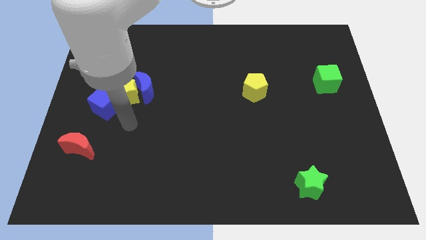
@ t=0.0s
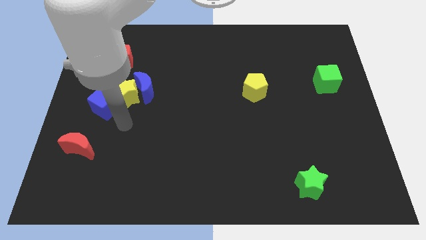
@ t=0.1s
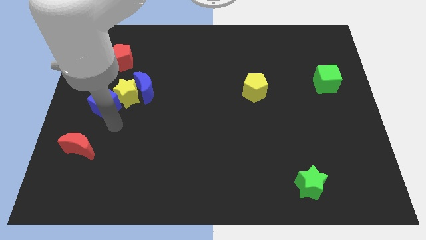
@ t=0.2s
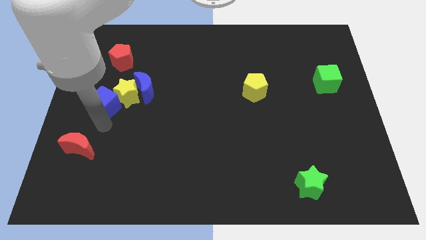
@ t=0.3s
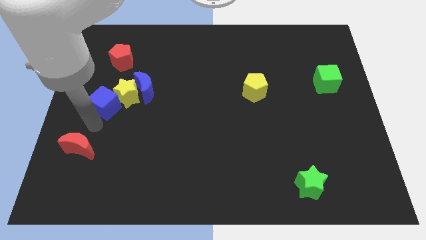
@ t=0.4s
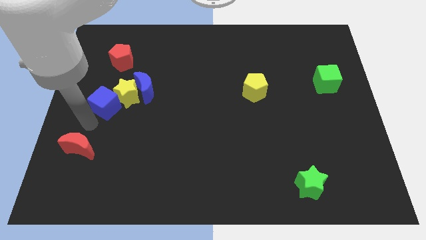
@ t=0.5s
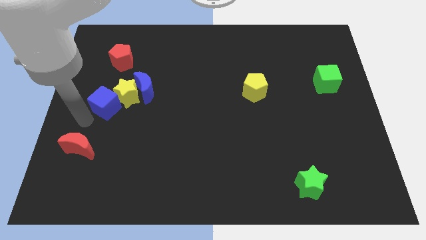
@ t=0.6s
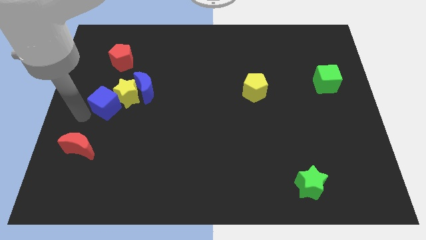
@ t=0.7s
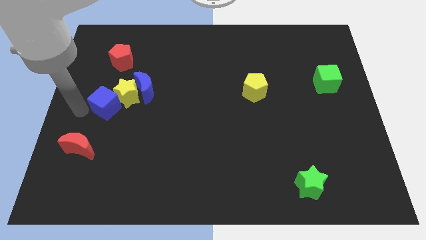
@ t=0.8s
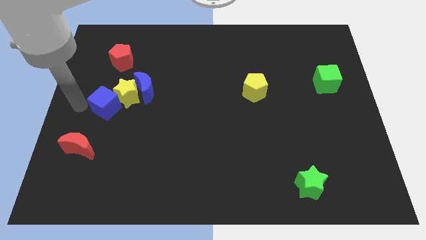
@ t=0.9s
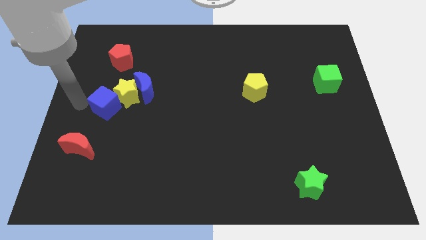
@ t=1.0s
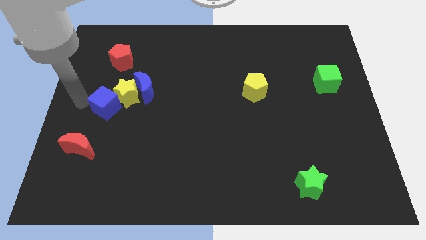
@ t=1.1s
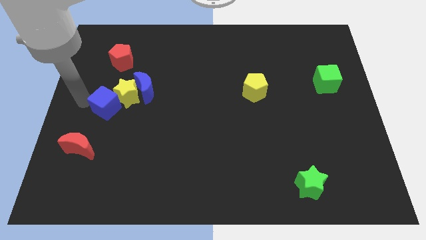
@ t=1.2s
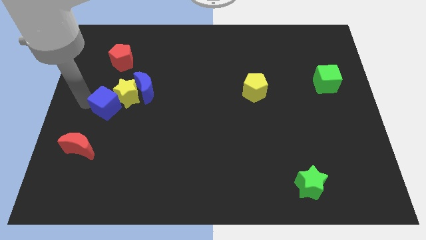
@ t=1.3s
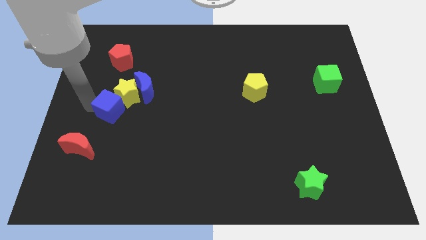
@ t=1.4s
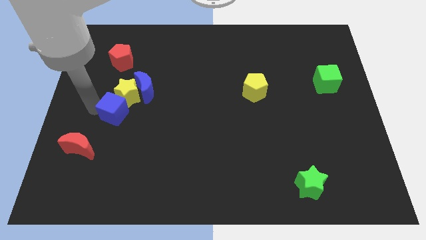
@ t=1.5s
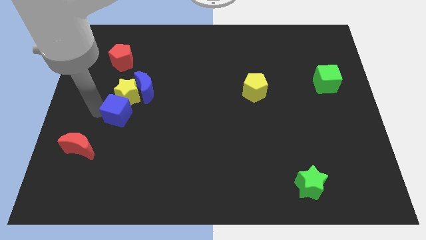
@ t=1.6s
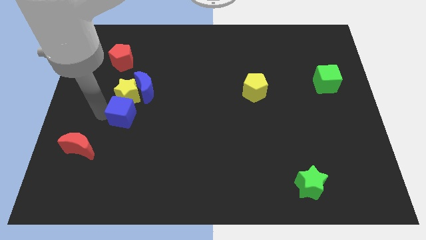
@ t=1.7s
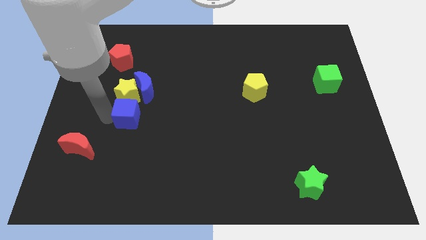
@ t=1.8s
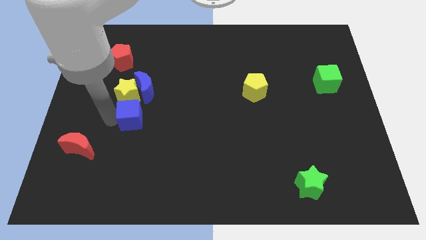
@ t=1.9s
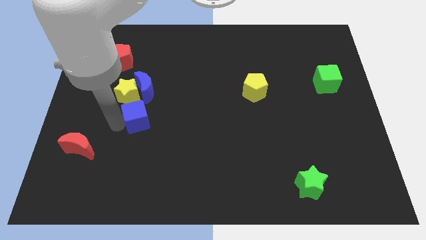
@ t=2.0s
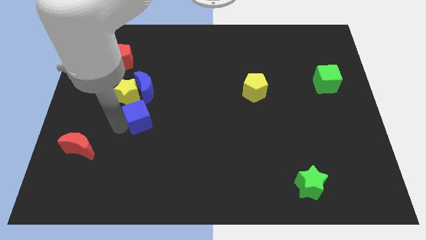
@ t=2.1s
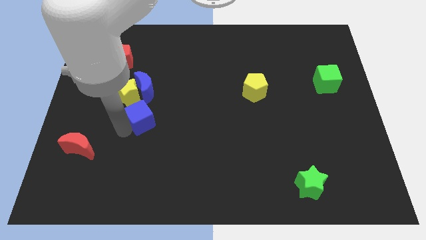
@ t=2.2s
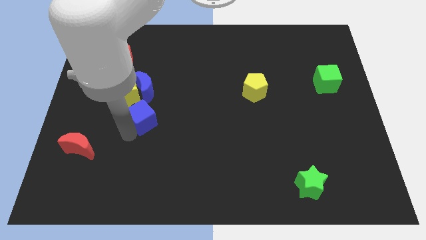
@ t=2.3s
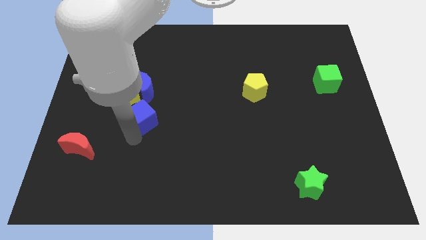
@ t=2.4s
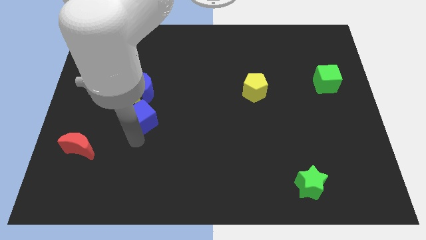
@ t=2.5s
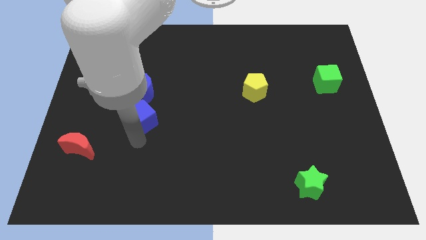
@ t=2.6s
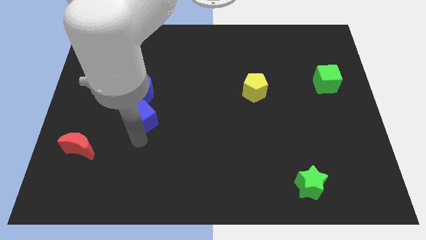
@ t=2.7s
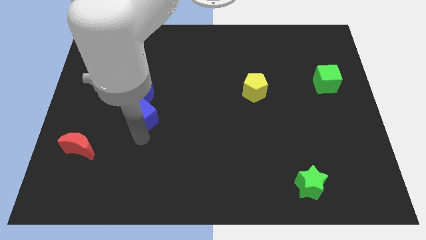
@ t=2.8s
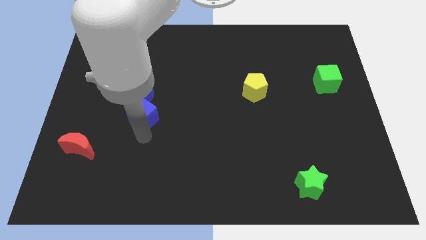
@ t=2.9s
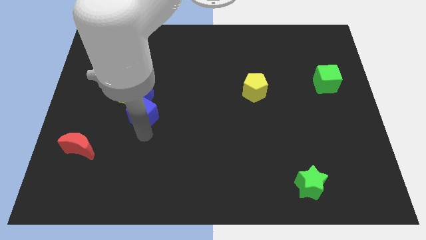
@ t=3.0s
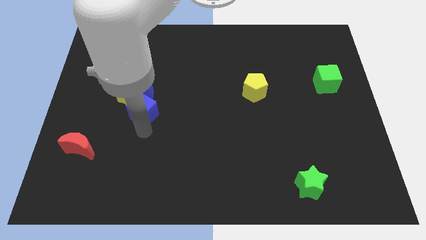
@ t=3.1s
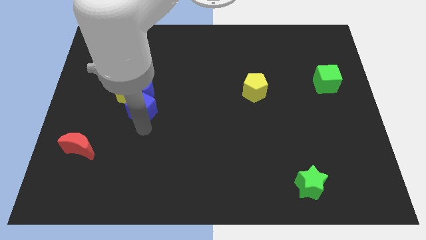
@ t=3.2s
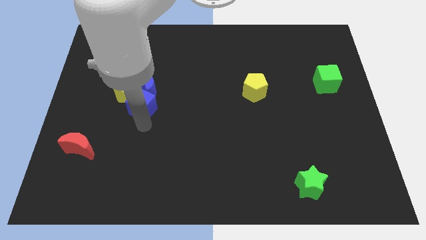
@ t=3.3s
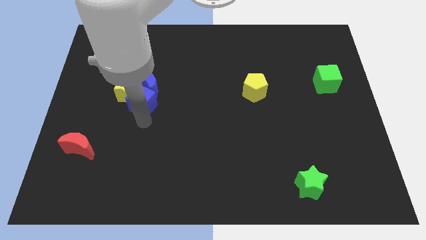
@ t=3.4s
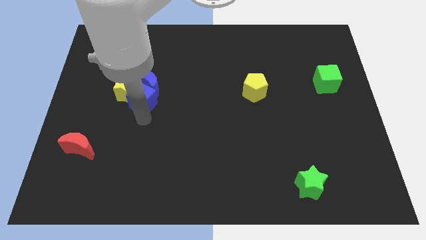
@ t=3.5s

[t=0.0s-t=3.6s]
slide the blue cube close to the blue moon

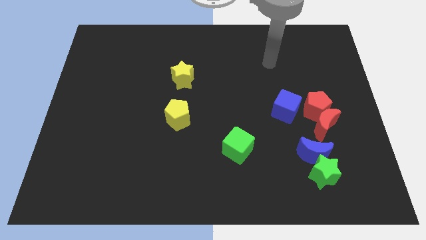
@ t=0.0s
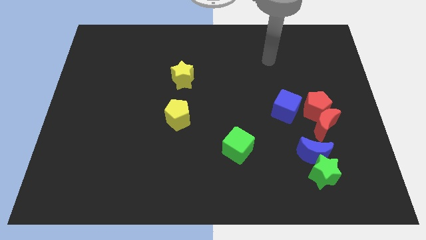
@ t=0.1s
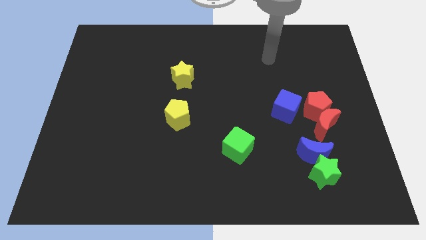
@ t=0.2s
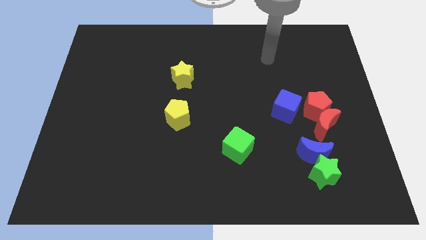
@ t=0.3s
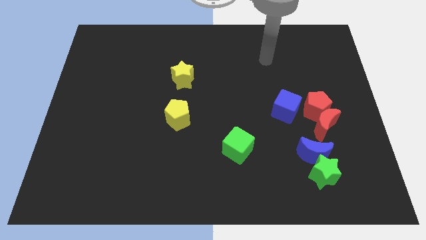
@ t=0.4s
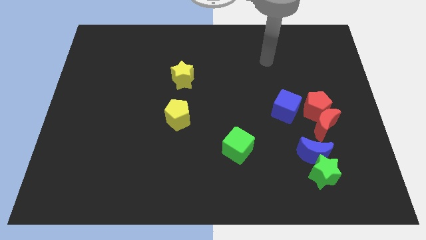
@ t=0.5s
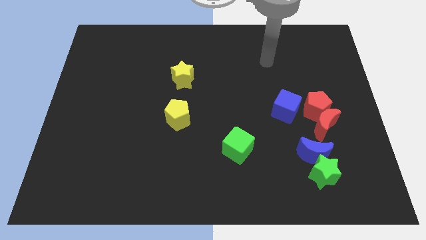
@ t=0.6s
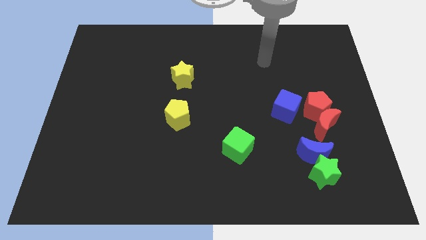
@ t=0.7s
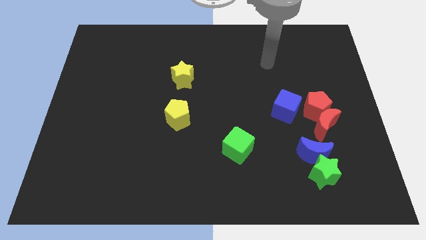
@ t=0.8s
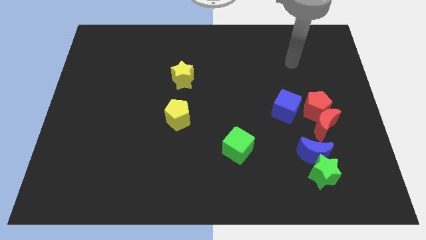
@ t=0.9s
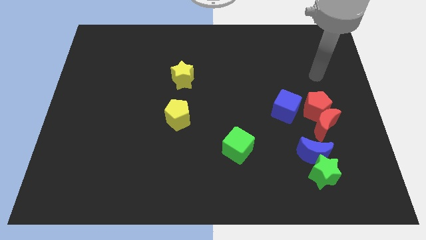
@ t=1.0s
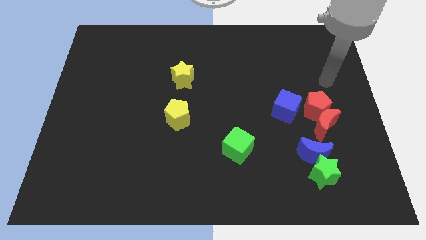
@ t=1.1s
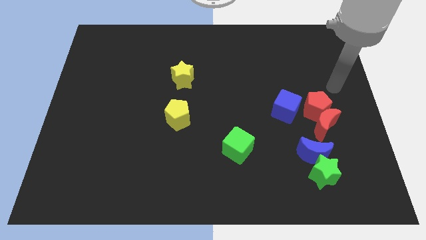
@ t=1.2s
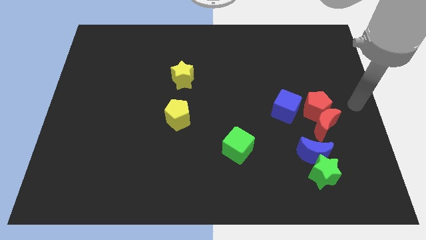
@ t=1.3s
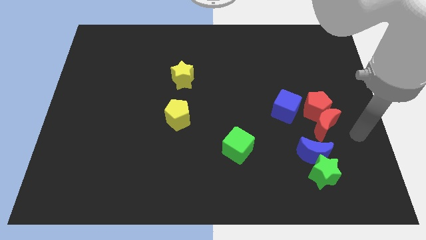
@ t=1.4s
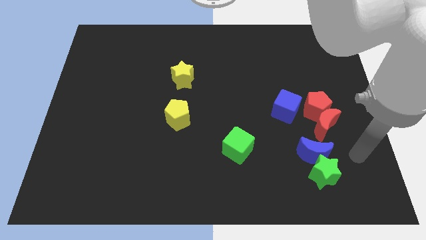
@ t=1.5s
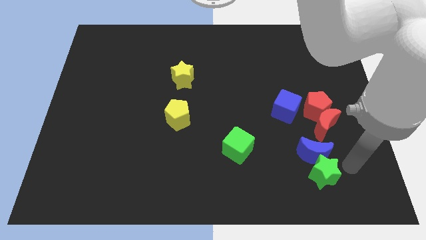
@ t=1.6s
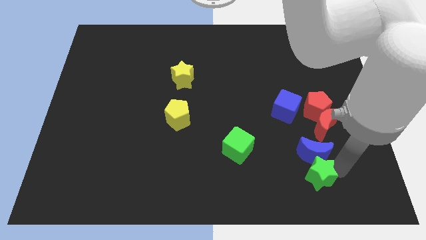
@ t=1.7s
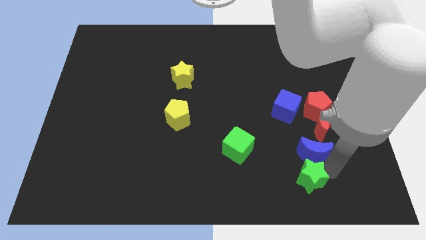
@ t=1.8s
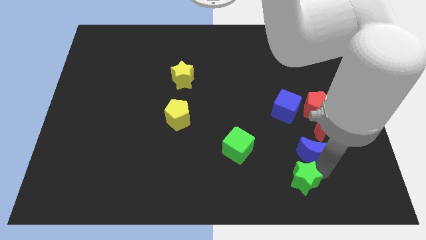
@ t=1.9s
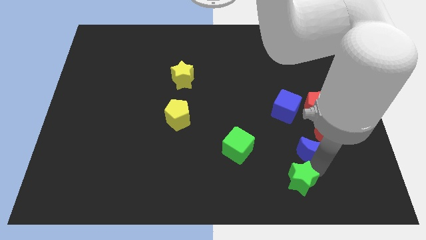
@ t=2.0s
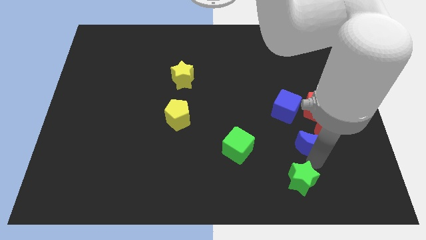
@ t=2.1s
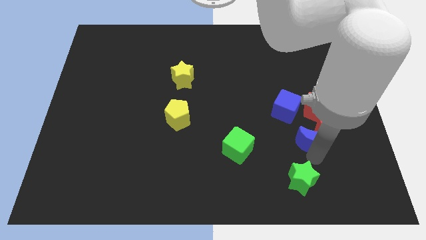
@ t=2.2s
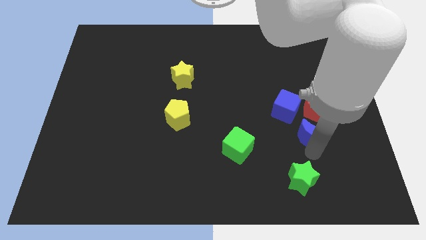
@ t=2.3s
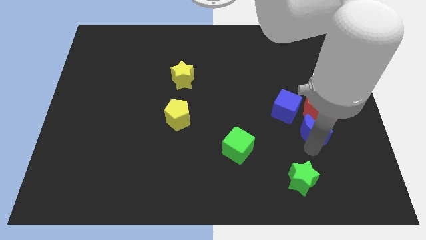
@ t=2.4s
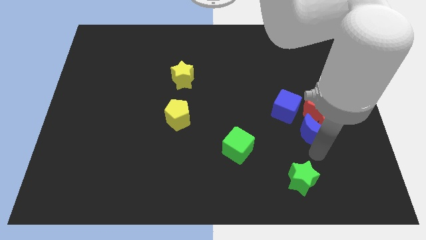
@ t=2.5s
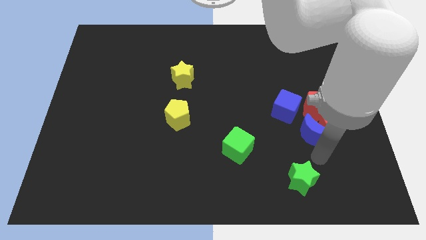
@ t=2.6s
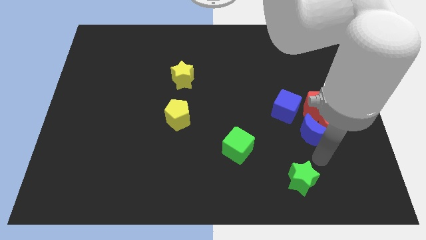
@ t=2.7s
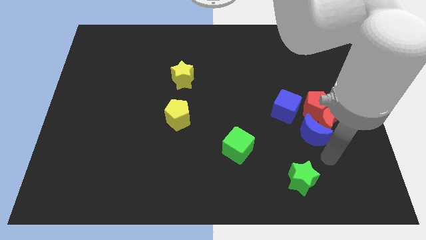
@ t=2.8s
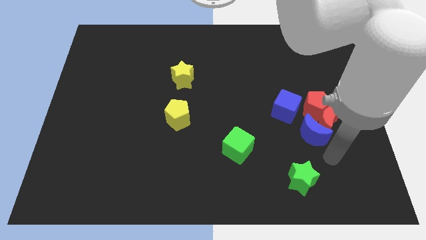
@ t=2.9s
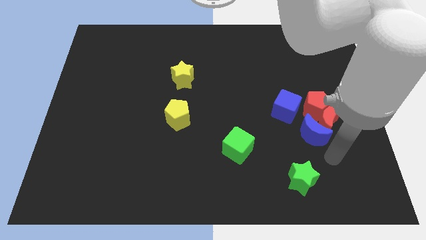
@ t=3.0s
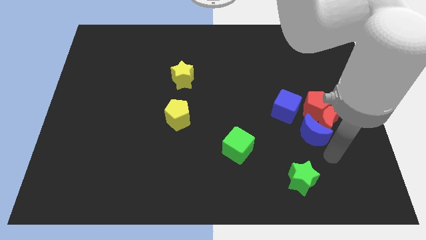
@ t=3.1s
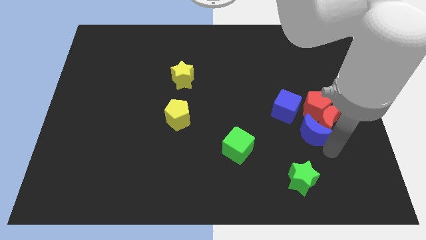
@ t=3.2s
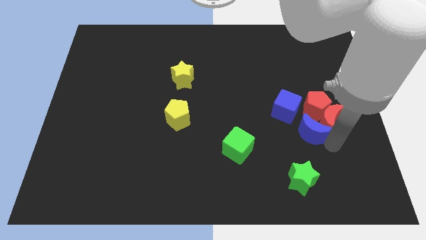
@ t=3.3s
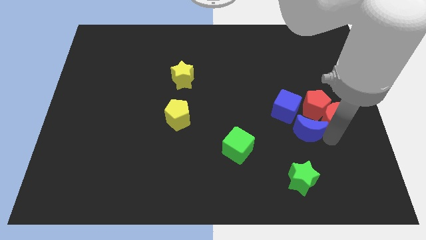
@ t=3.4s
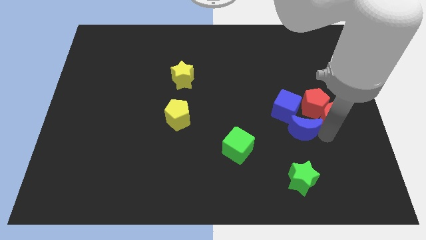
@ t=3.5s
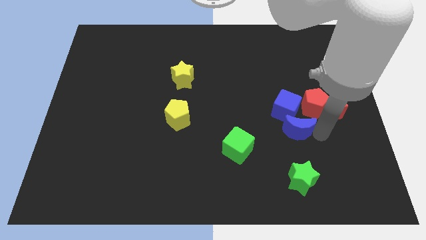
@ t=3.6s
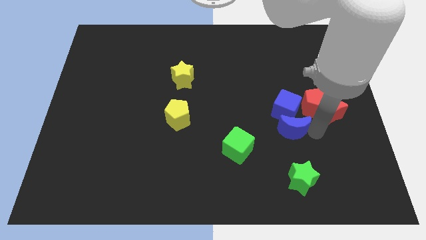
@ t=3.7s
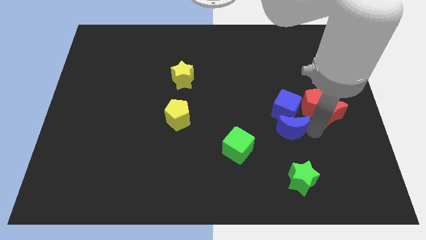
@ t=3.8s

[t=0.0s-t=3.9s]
slide the blue moon close to the blue cube

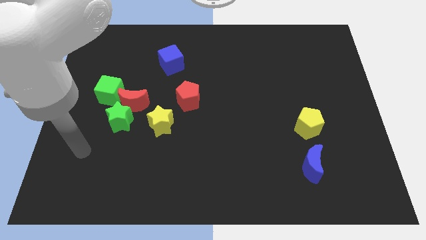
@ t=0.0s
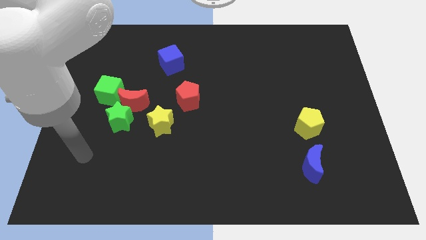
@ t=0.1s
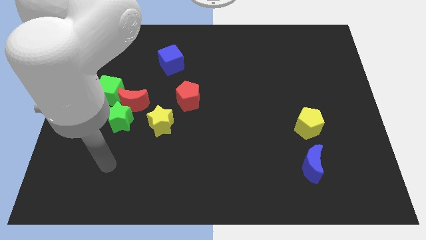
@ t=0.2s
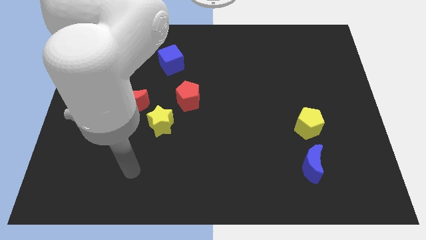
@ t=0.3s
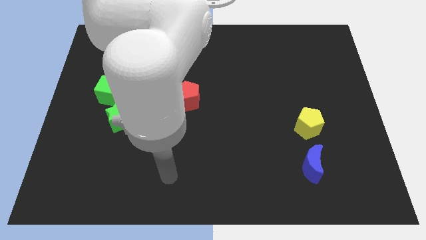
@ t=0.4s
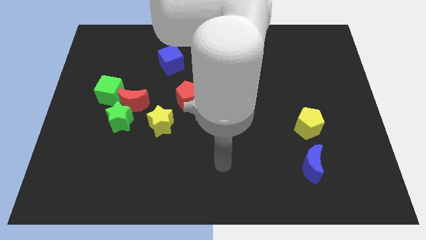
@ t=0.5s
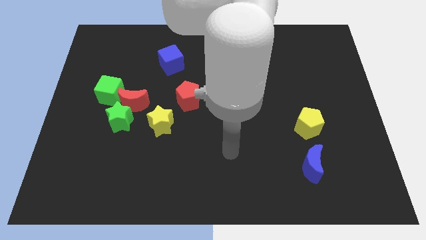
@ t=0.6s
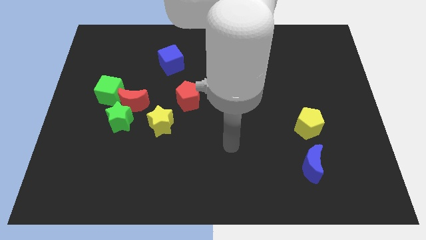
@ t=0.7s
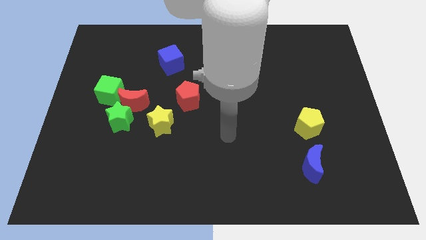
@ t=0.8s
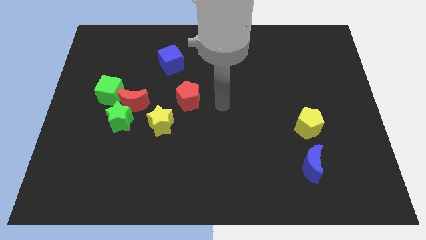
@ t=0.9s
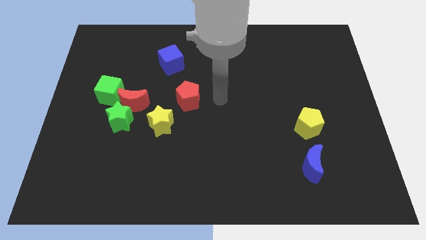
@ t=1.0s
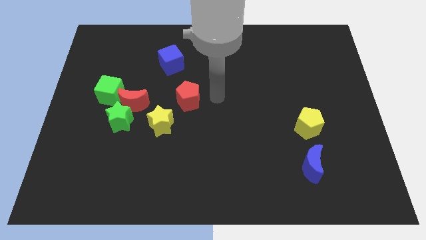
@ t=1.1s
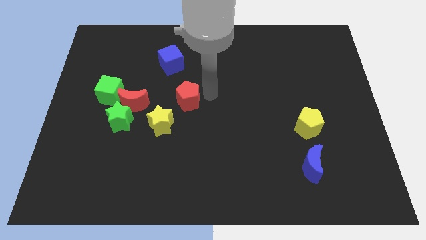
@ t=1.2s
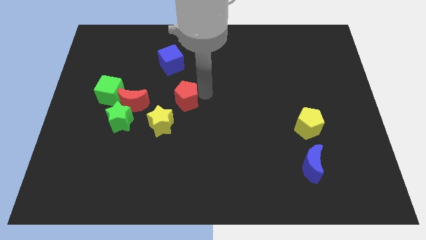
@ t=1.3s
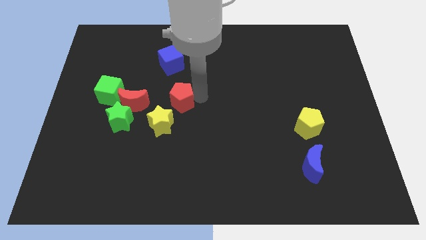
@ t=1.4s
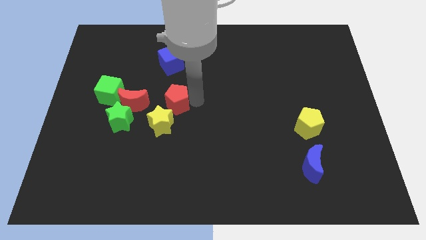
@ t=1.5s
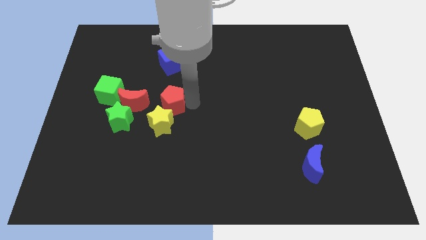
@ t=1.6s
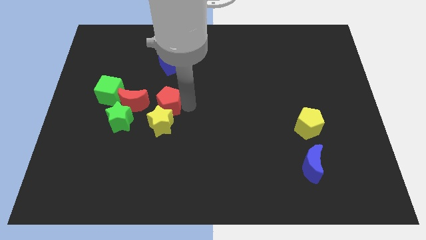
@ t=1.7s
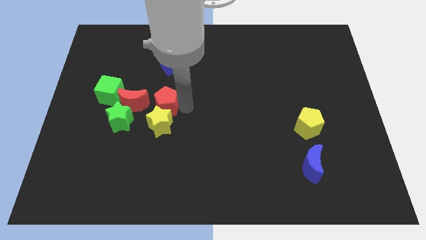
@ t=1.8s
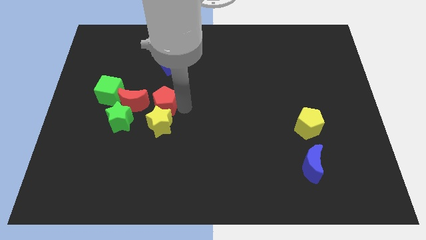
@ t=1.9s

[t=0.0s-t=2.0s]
put the red pentagon to the yellow star
